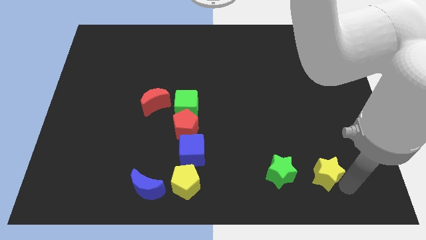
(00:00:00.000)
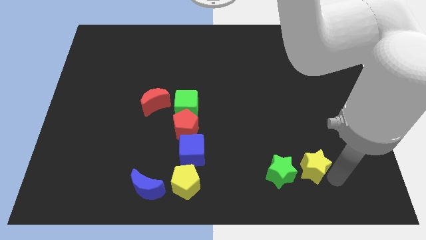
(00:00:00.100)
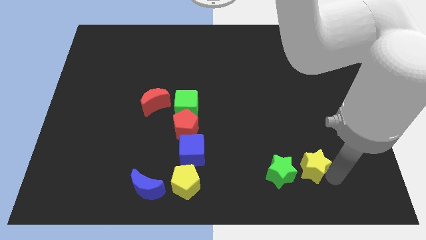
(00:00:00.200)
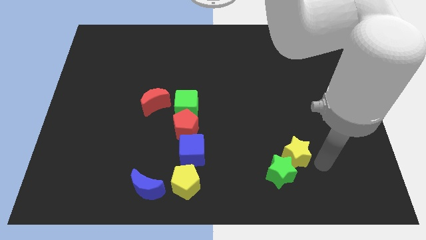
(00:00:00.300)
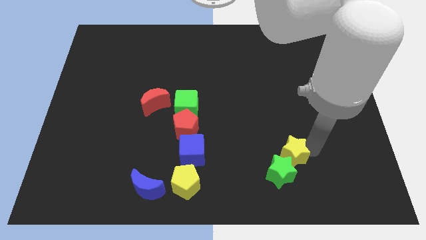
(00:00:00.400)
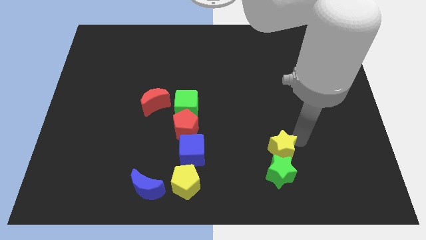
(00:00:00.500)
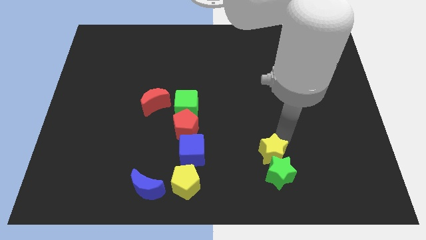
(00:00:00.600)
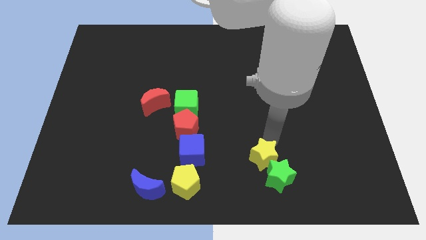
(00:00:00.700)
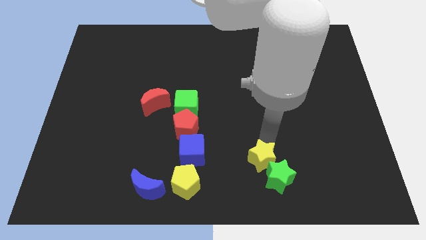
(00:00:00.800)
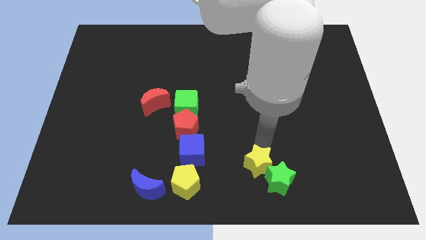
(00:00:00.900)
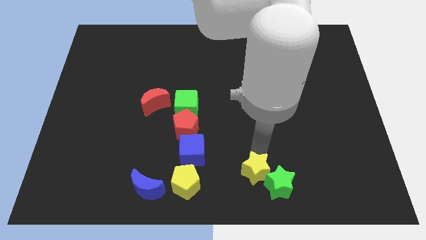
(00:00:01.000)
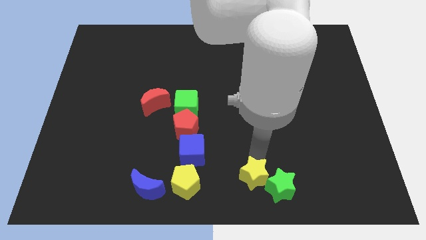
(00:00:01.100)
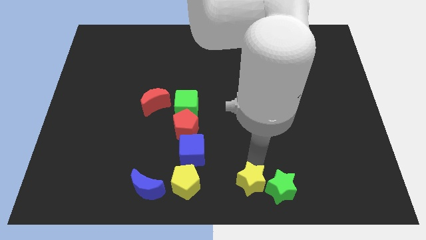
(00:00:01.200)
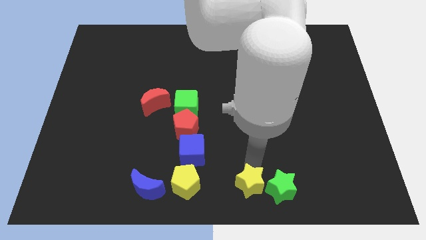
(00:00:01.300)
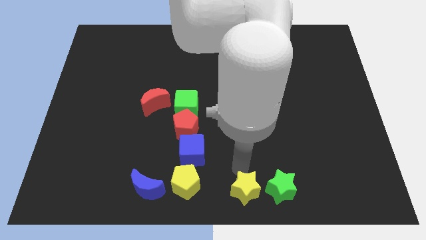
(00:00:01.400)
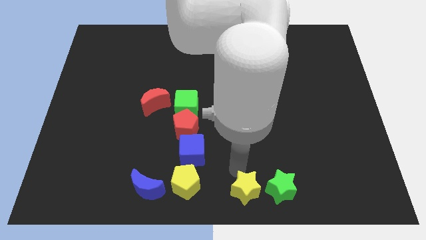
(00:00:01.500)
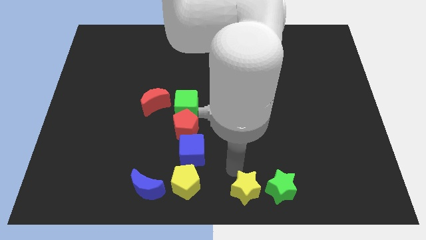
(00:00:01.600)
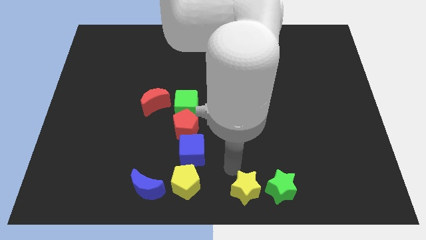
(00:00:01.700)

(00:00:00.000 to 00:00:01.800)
push yellow star to the left side of the green star

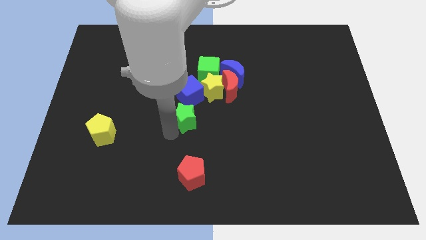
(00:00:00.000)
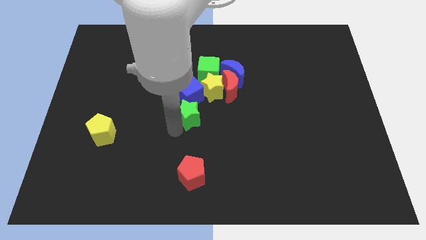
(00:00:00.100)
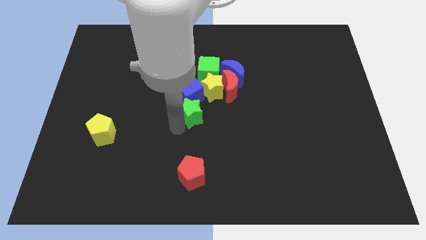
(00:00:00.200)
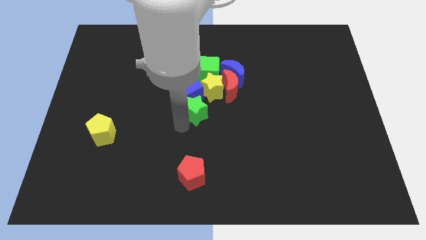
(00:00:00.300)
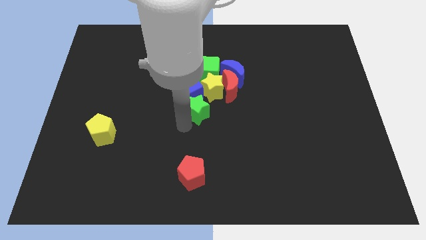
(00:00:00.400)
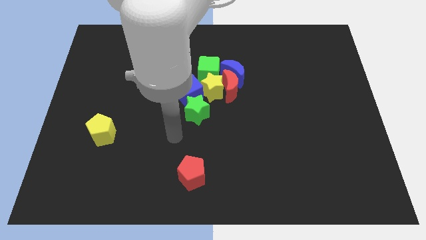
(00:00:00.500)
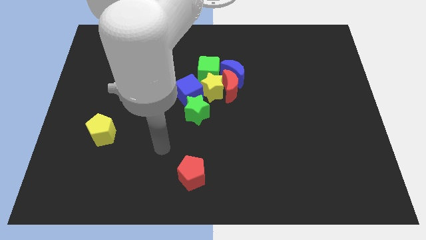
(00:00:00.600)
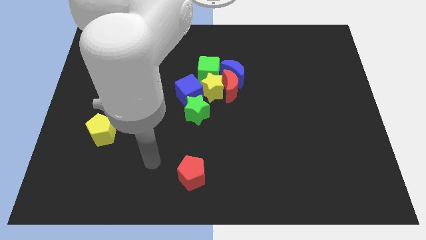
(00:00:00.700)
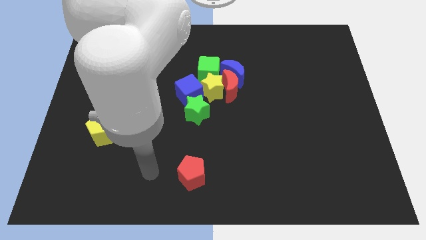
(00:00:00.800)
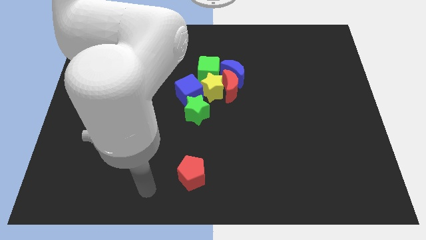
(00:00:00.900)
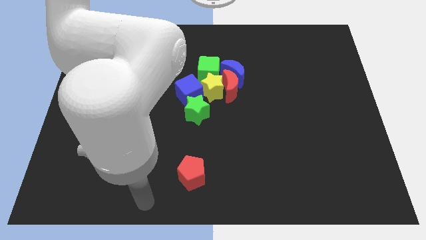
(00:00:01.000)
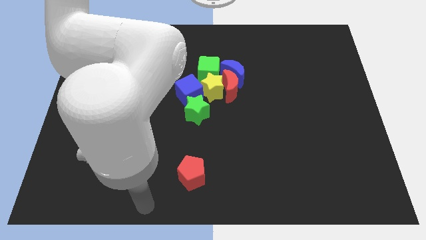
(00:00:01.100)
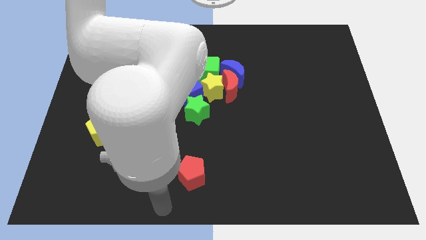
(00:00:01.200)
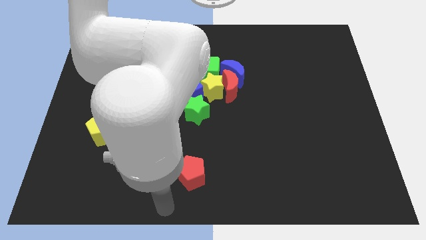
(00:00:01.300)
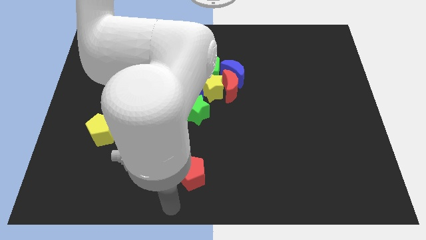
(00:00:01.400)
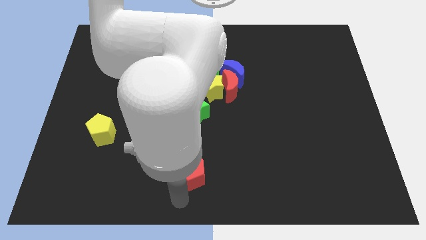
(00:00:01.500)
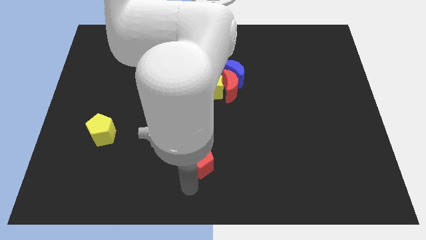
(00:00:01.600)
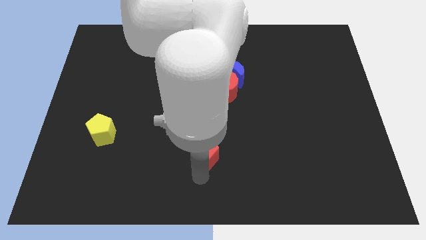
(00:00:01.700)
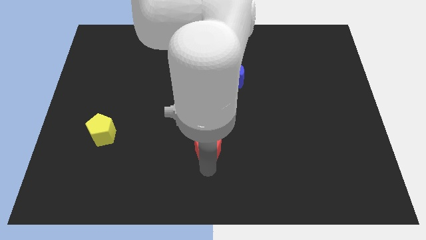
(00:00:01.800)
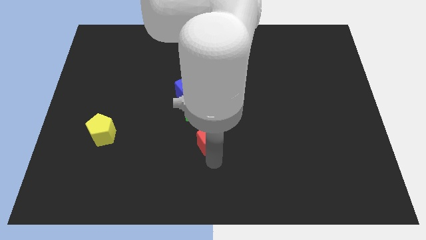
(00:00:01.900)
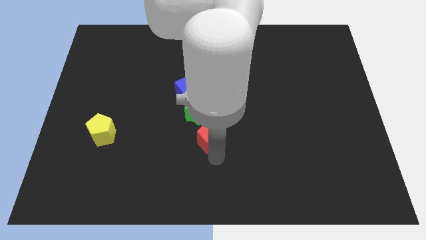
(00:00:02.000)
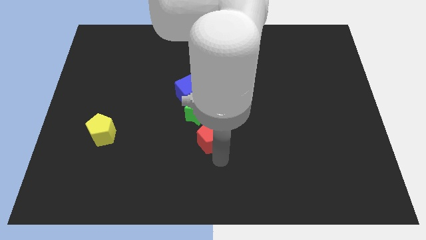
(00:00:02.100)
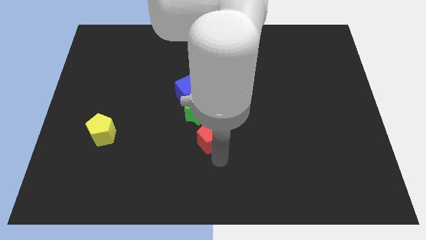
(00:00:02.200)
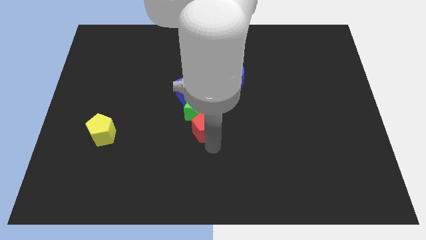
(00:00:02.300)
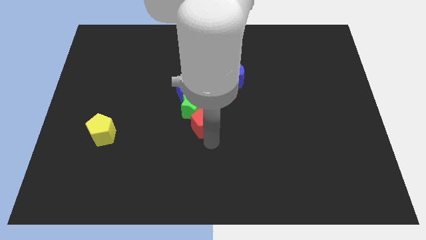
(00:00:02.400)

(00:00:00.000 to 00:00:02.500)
push red pentagon in to green star

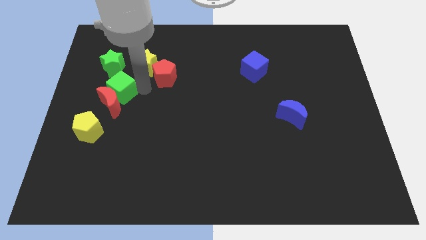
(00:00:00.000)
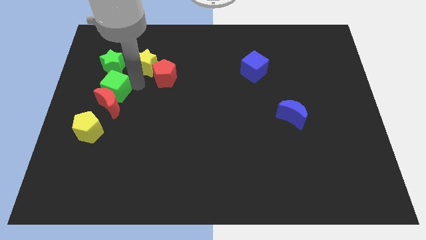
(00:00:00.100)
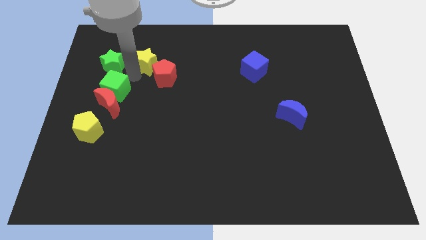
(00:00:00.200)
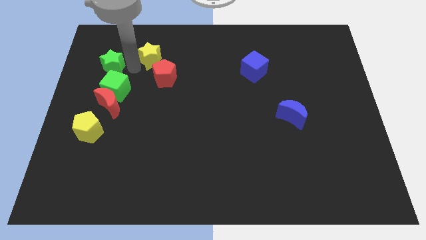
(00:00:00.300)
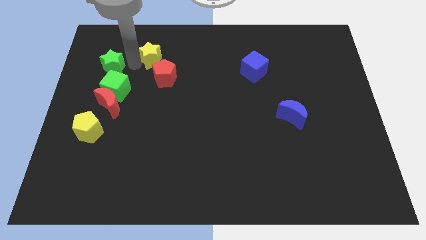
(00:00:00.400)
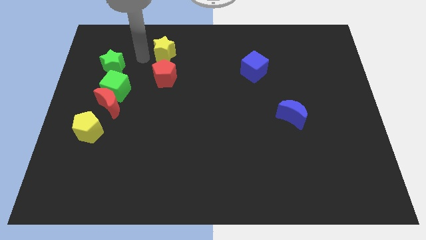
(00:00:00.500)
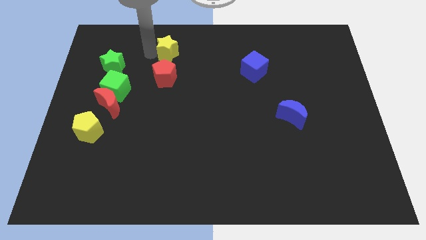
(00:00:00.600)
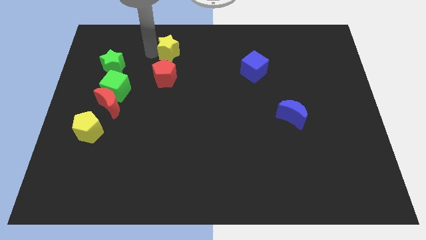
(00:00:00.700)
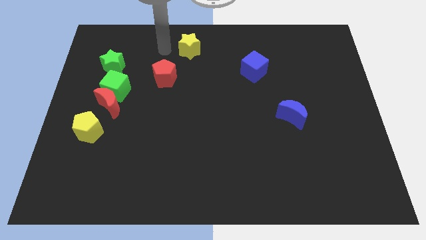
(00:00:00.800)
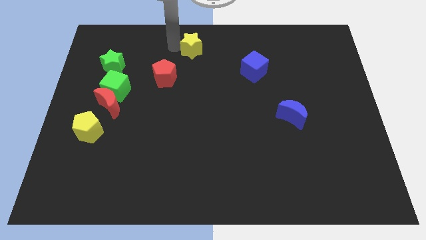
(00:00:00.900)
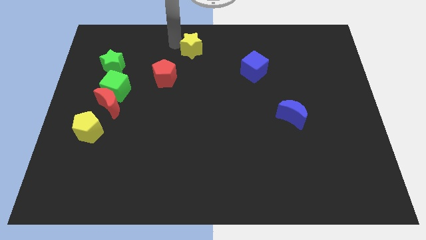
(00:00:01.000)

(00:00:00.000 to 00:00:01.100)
drag yellow star towards the top center

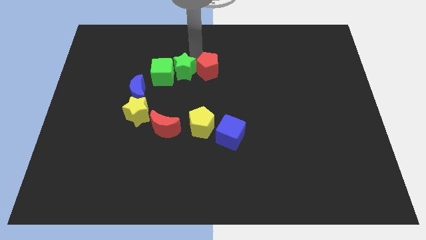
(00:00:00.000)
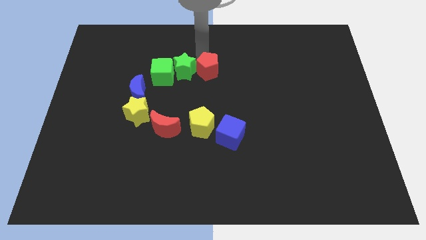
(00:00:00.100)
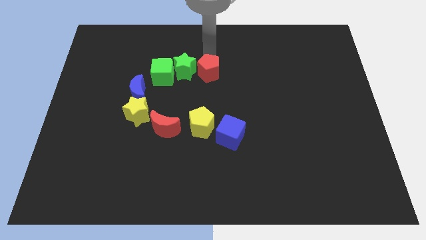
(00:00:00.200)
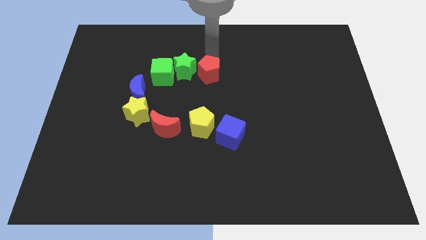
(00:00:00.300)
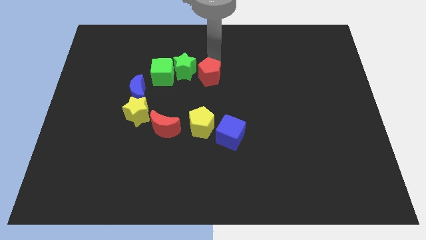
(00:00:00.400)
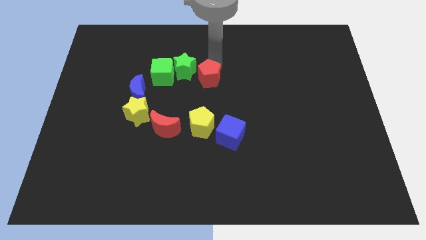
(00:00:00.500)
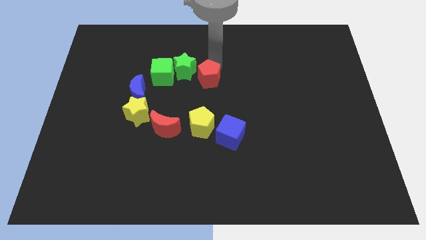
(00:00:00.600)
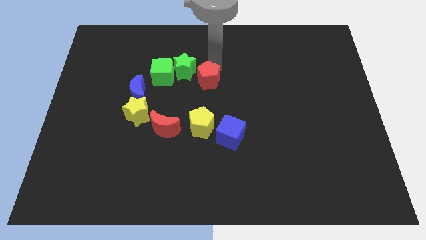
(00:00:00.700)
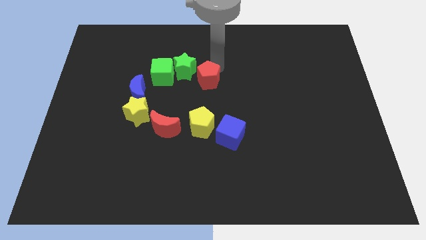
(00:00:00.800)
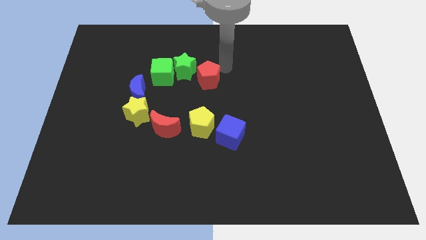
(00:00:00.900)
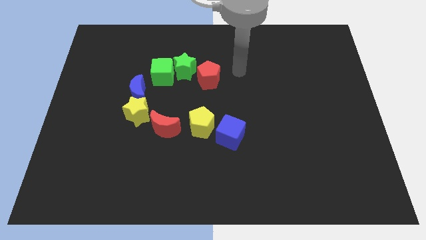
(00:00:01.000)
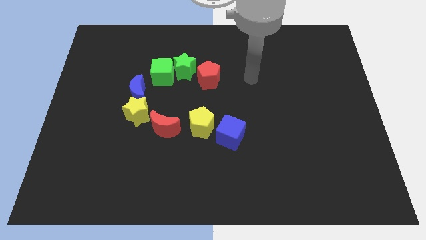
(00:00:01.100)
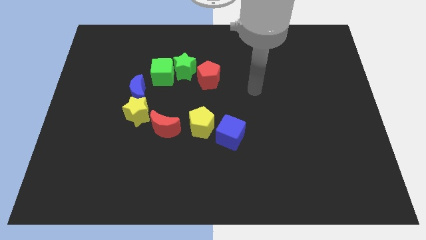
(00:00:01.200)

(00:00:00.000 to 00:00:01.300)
push the red pentagon to the down

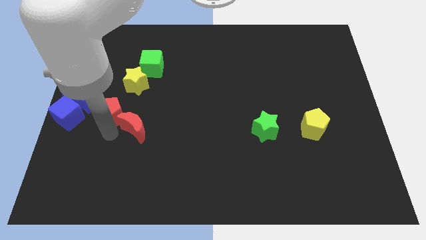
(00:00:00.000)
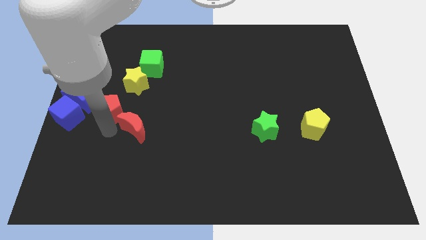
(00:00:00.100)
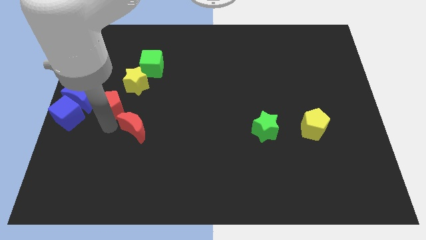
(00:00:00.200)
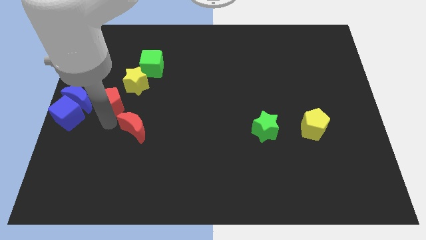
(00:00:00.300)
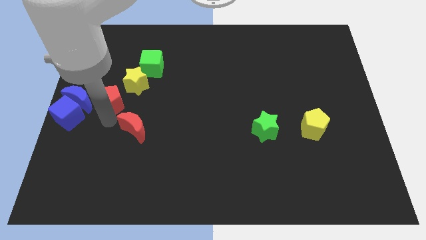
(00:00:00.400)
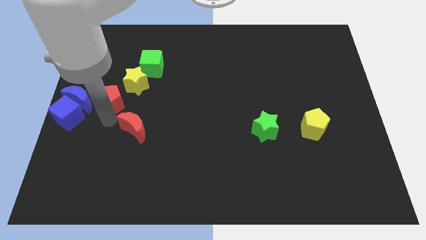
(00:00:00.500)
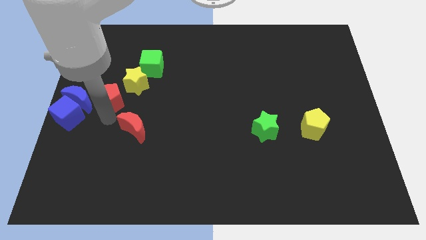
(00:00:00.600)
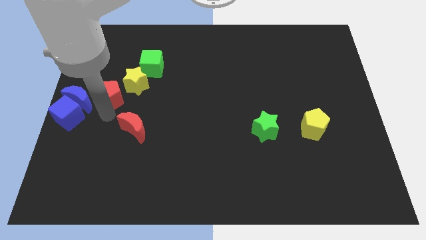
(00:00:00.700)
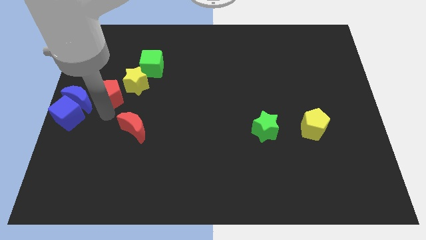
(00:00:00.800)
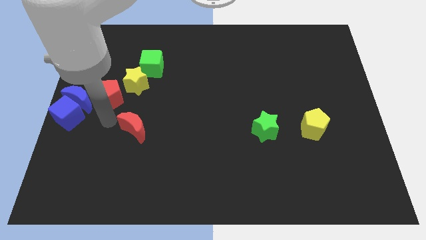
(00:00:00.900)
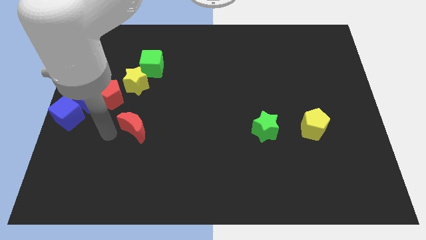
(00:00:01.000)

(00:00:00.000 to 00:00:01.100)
separate red pentagon from red moon

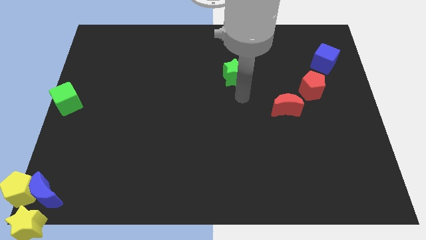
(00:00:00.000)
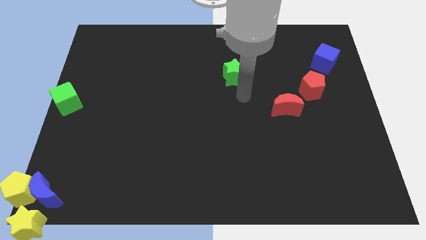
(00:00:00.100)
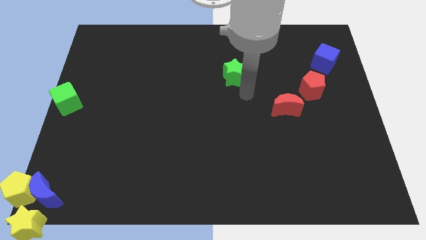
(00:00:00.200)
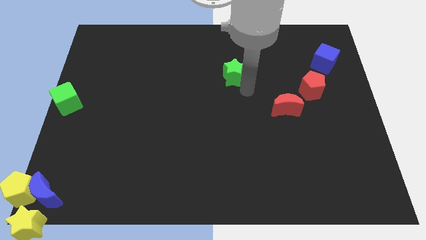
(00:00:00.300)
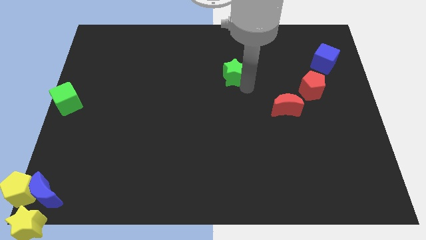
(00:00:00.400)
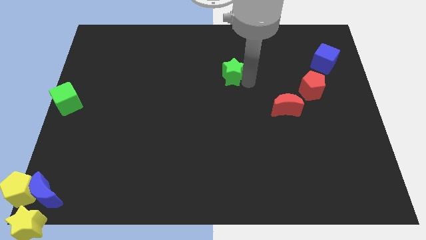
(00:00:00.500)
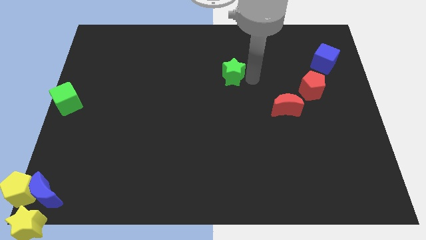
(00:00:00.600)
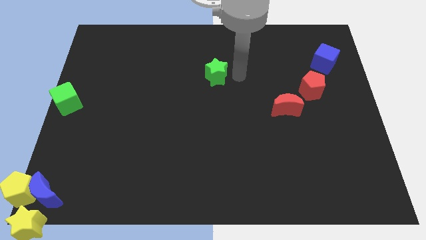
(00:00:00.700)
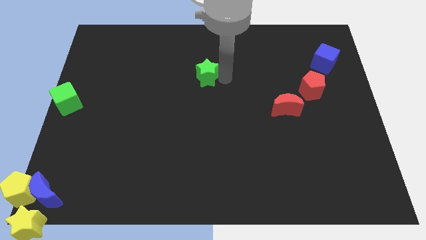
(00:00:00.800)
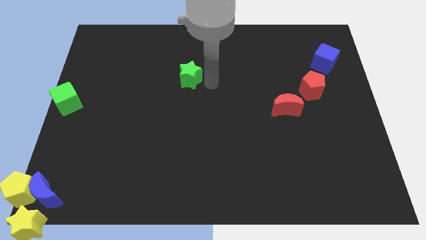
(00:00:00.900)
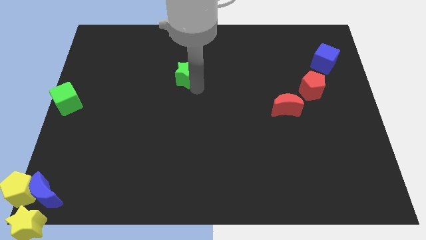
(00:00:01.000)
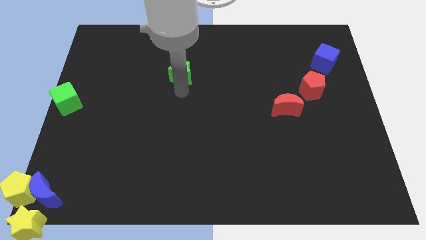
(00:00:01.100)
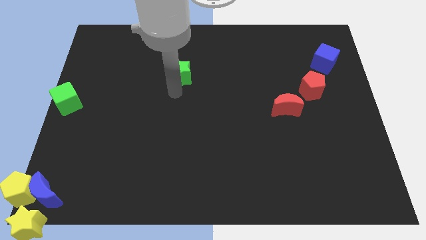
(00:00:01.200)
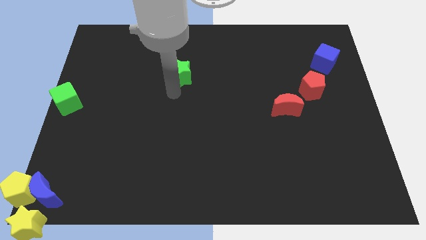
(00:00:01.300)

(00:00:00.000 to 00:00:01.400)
move the green star to the left of the board
